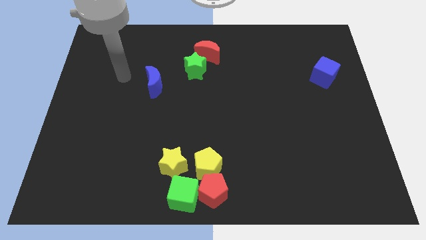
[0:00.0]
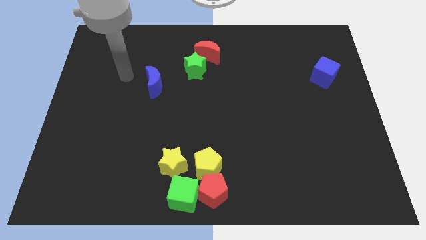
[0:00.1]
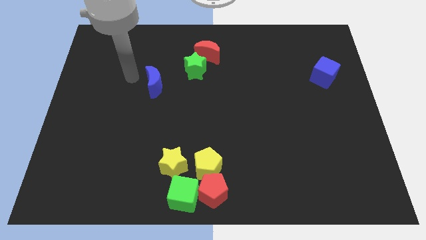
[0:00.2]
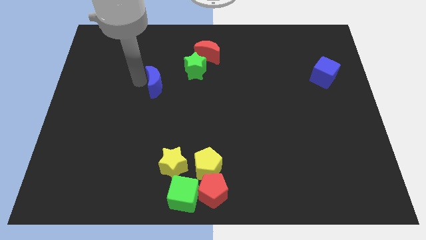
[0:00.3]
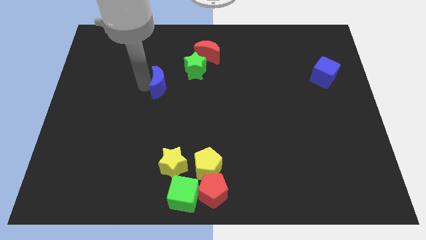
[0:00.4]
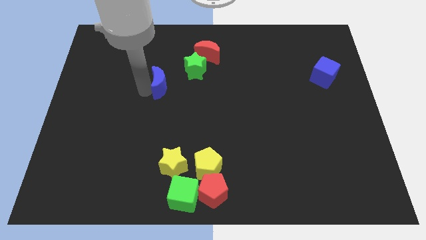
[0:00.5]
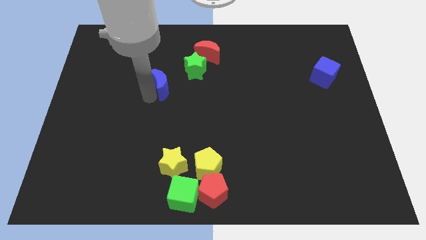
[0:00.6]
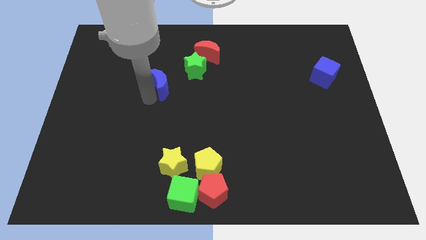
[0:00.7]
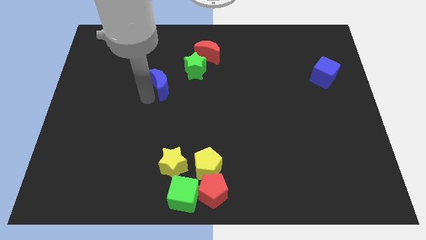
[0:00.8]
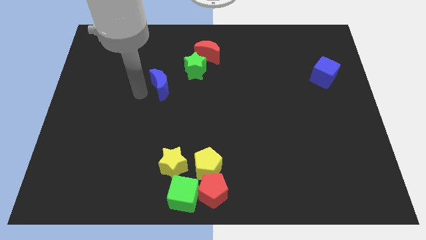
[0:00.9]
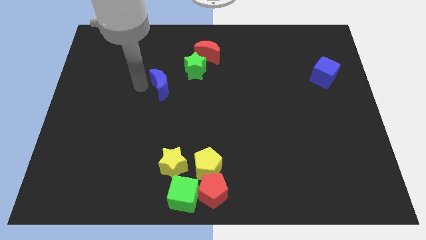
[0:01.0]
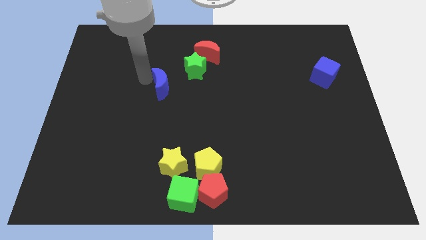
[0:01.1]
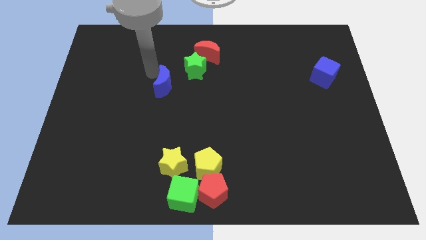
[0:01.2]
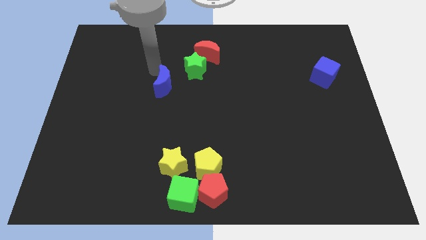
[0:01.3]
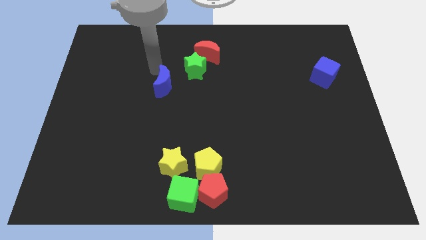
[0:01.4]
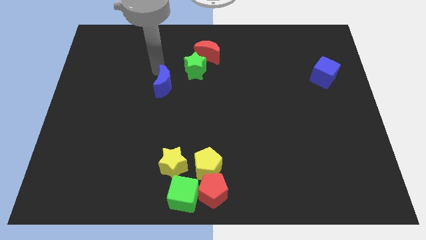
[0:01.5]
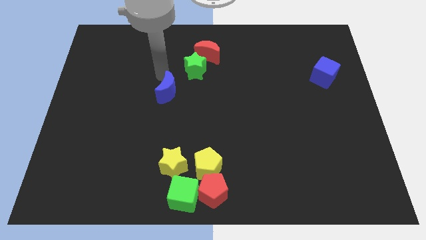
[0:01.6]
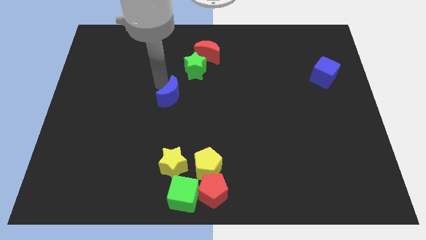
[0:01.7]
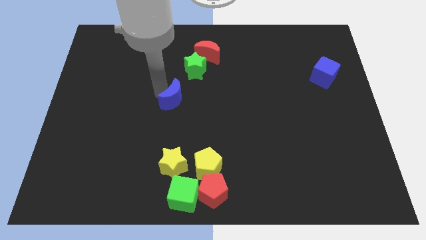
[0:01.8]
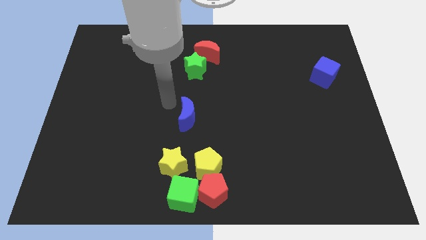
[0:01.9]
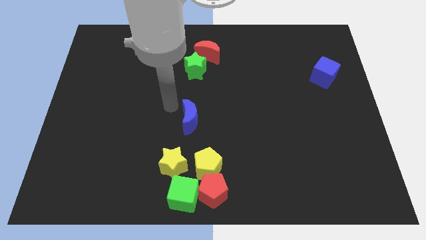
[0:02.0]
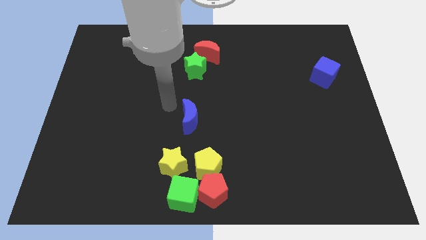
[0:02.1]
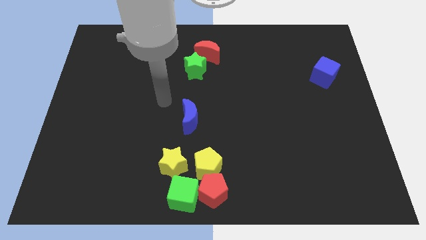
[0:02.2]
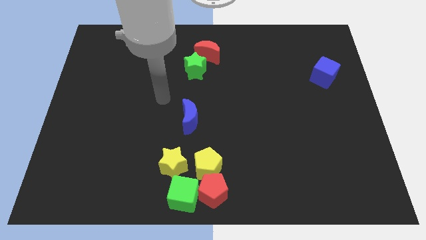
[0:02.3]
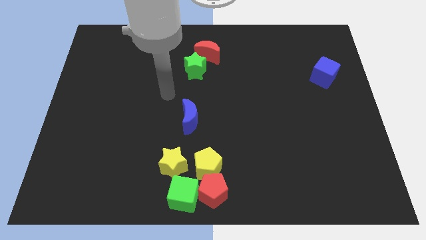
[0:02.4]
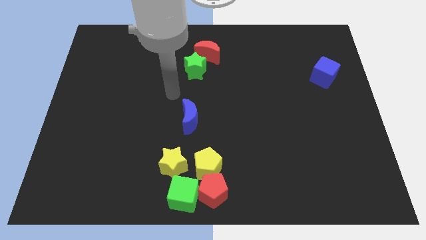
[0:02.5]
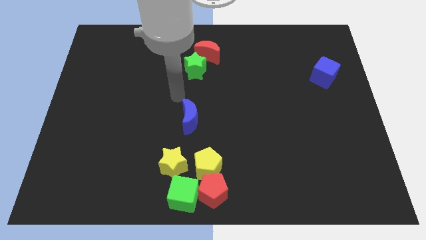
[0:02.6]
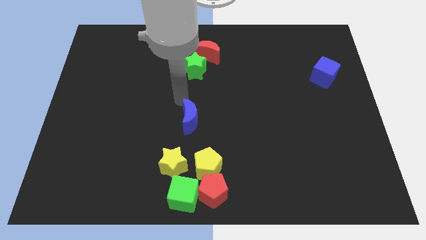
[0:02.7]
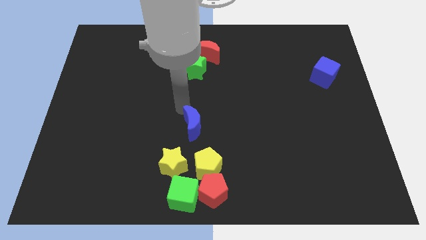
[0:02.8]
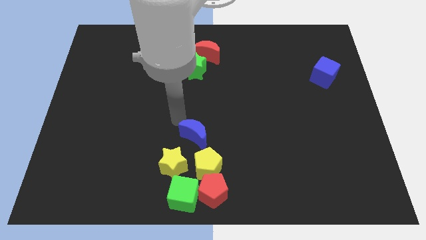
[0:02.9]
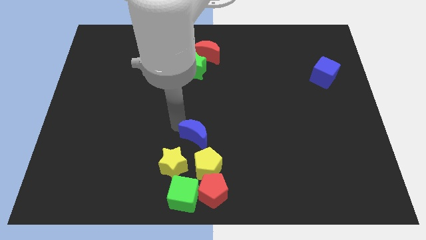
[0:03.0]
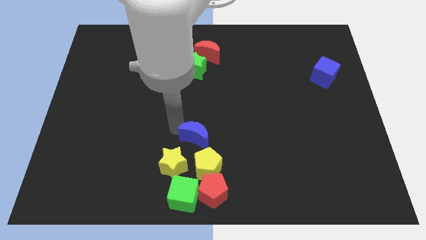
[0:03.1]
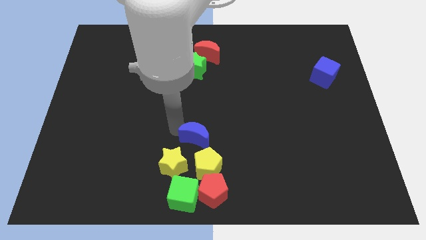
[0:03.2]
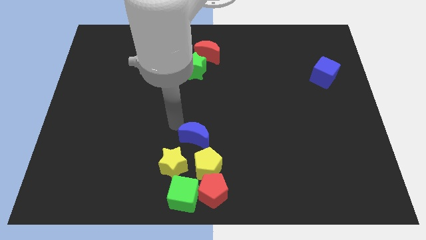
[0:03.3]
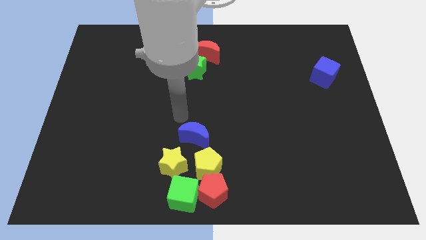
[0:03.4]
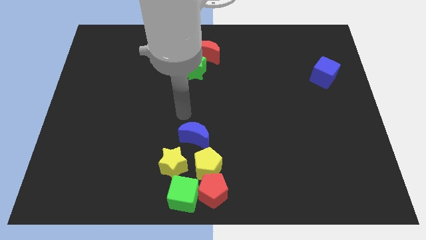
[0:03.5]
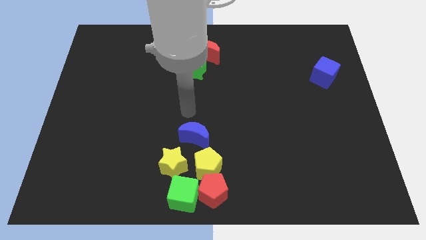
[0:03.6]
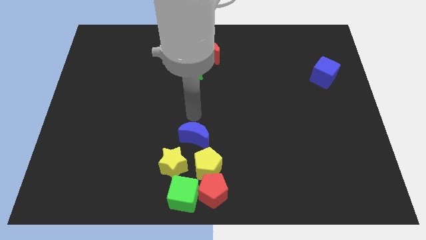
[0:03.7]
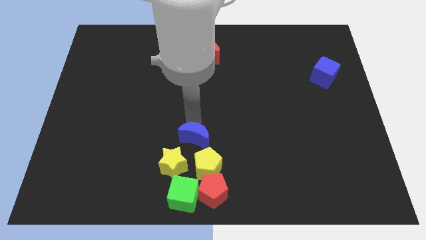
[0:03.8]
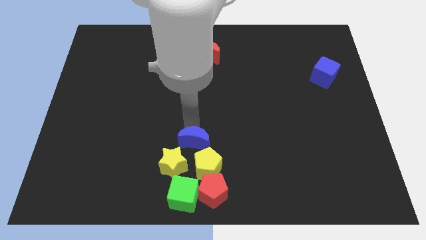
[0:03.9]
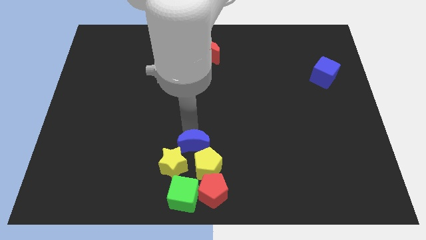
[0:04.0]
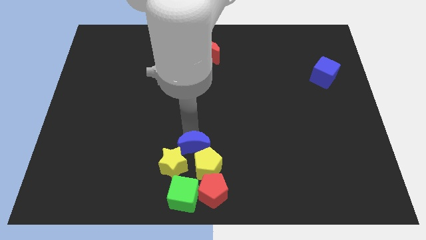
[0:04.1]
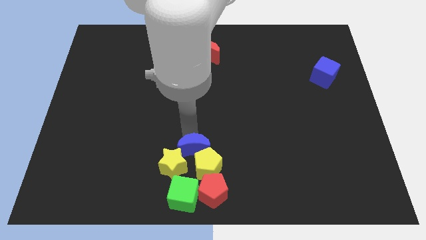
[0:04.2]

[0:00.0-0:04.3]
place the blue crescent above the yellow blocks

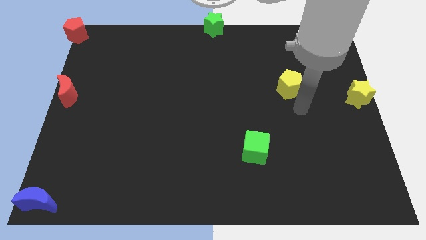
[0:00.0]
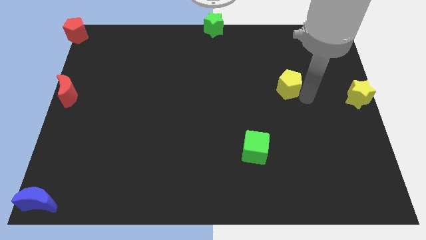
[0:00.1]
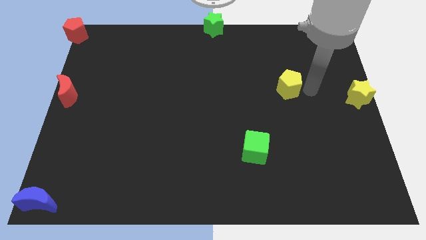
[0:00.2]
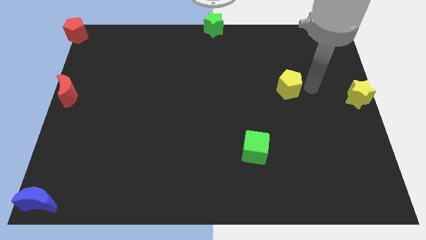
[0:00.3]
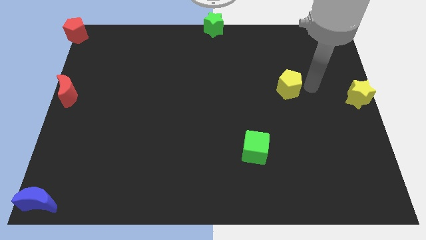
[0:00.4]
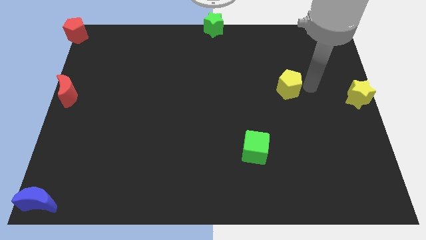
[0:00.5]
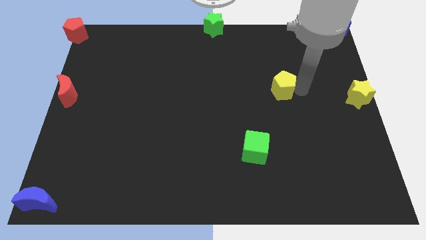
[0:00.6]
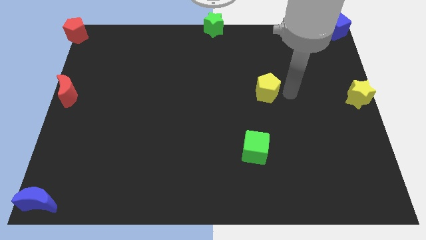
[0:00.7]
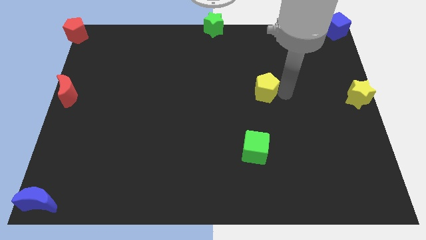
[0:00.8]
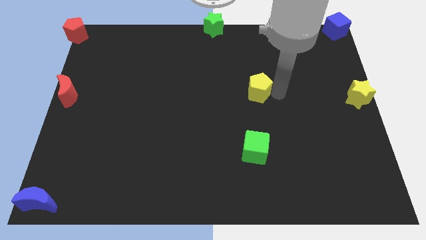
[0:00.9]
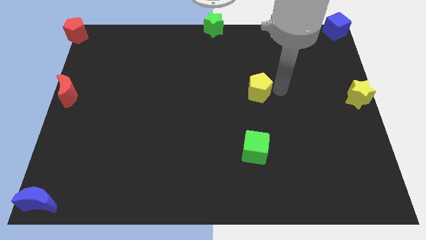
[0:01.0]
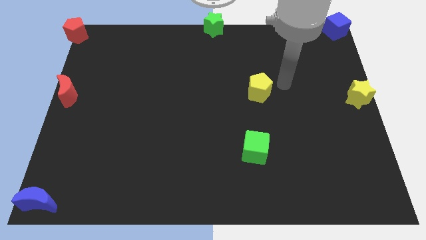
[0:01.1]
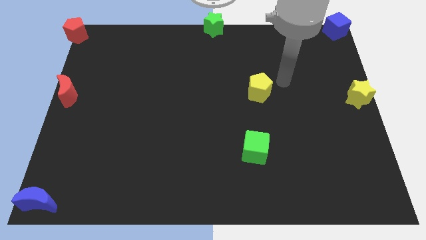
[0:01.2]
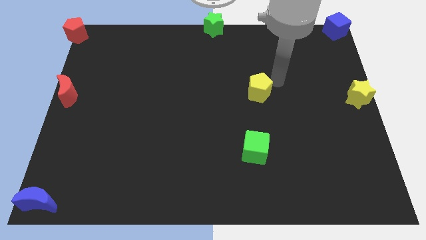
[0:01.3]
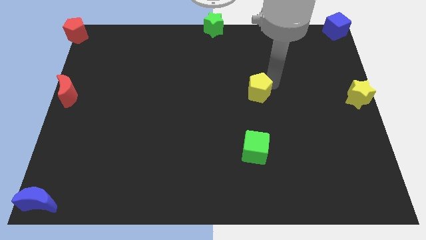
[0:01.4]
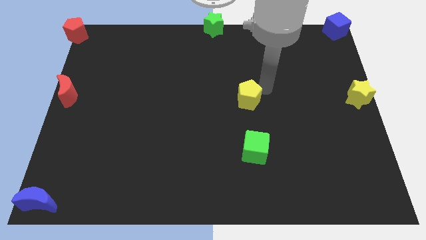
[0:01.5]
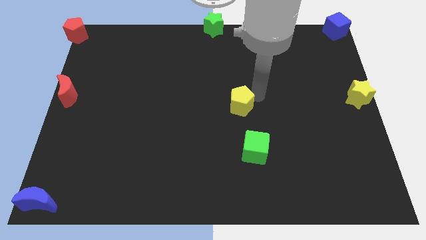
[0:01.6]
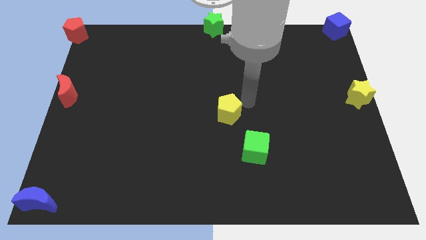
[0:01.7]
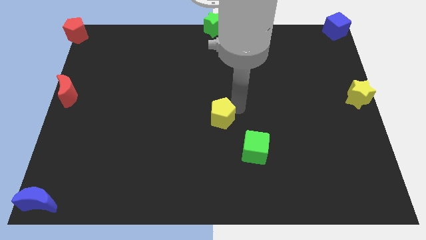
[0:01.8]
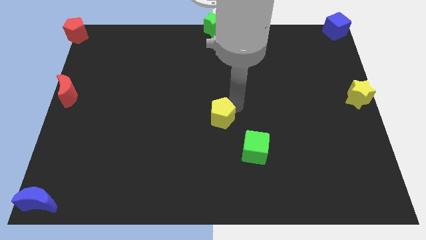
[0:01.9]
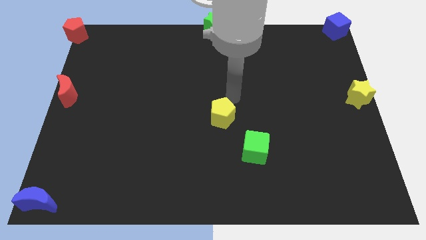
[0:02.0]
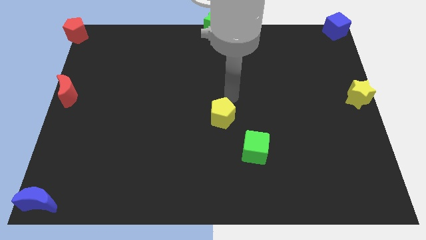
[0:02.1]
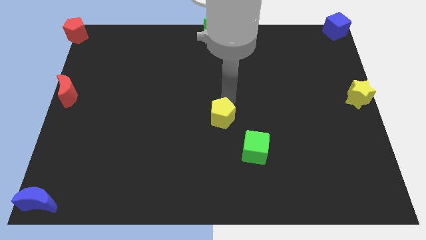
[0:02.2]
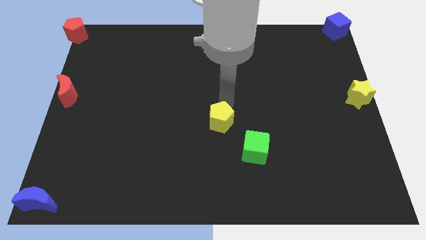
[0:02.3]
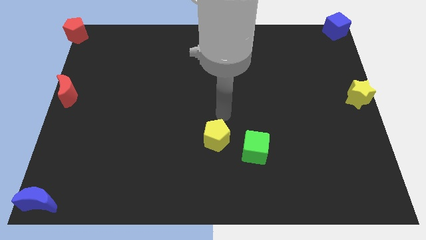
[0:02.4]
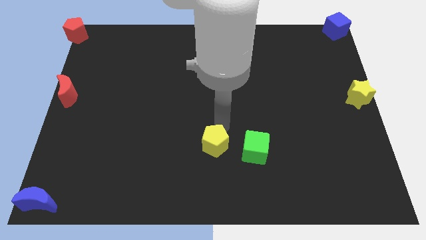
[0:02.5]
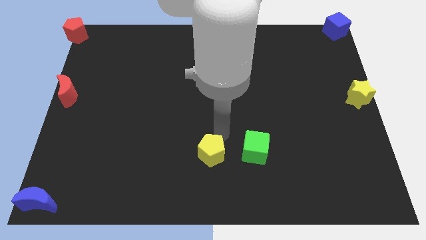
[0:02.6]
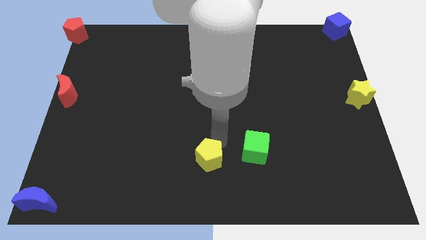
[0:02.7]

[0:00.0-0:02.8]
place the yellow pentagon left to the green cube

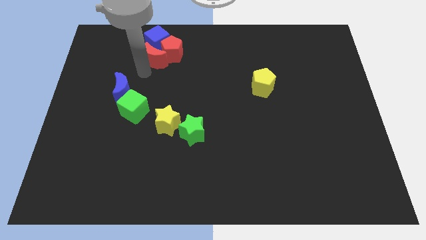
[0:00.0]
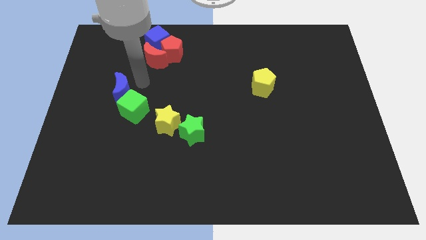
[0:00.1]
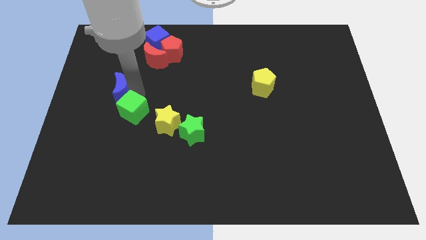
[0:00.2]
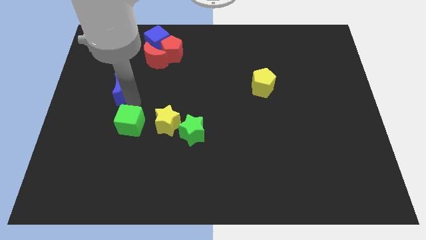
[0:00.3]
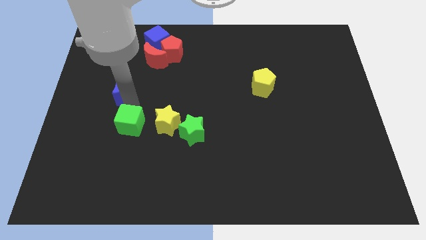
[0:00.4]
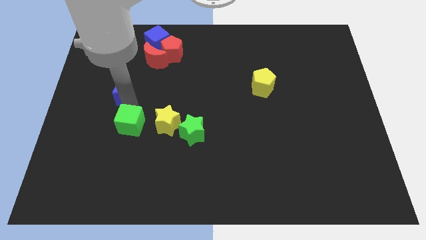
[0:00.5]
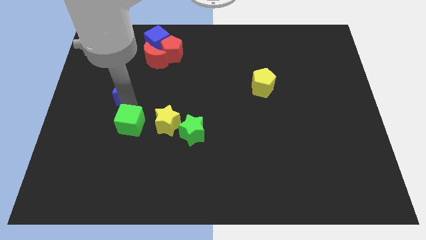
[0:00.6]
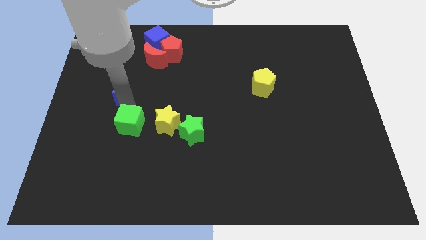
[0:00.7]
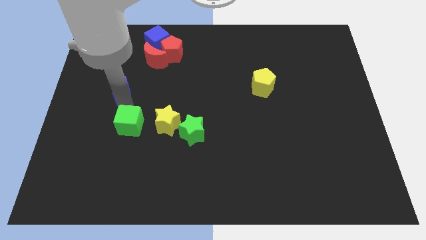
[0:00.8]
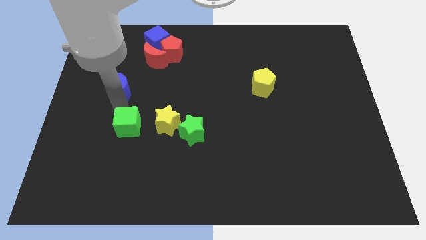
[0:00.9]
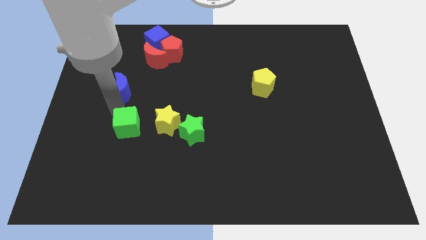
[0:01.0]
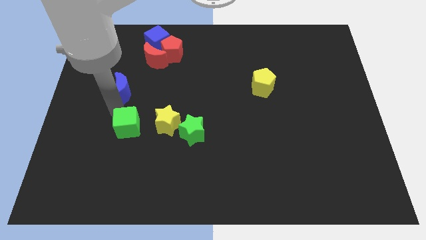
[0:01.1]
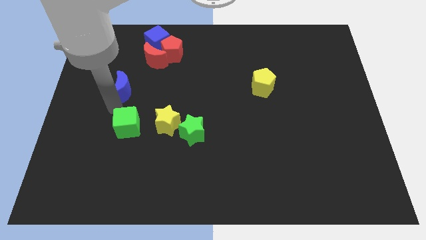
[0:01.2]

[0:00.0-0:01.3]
push the green cube slightly to the bottom

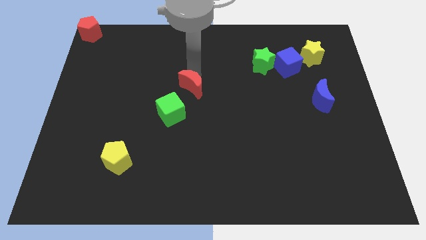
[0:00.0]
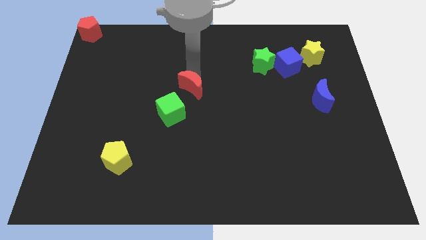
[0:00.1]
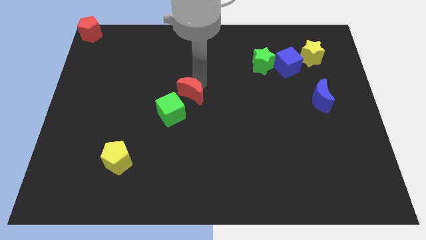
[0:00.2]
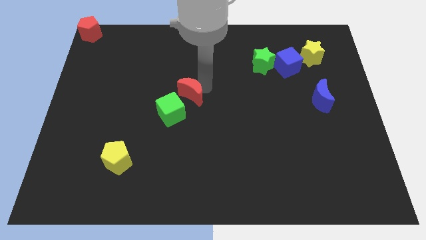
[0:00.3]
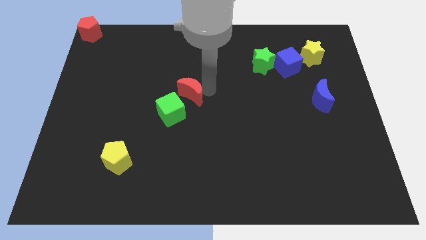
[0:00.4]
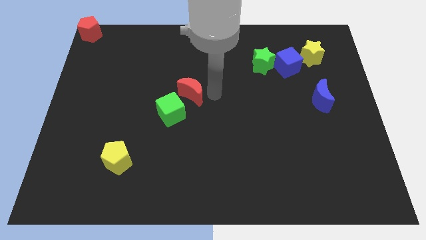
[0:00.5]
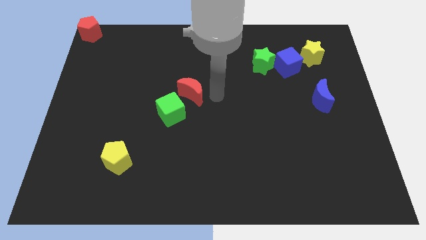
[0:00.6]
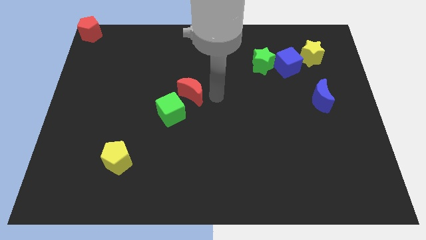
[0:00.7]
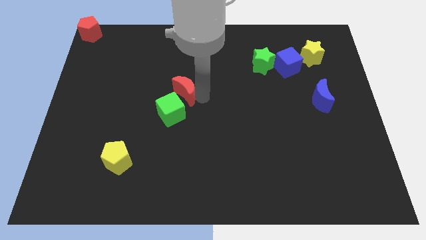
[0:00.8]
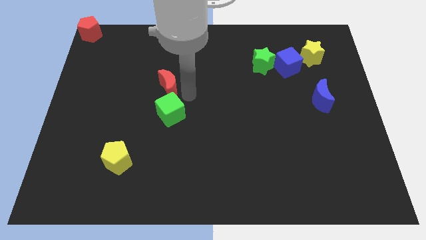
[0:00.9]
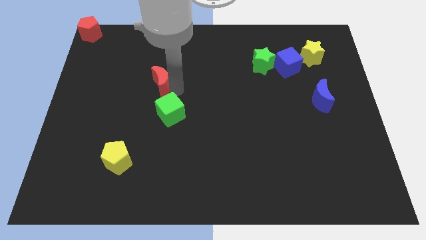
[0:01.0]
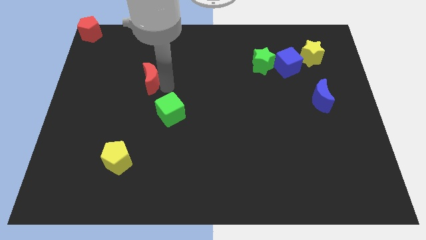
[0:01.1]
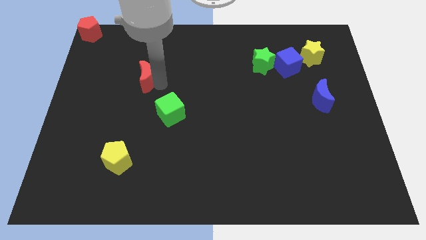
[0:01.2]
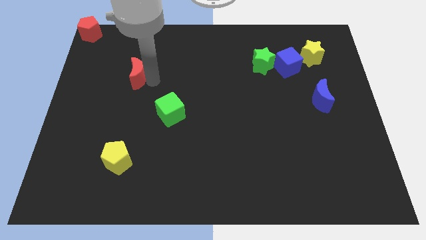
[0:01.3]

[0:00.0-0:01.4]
place the red crescent parallel to green cube
